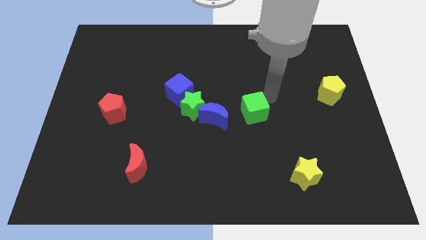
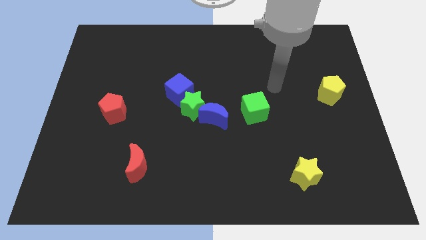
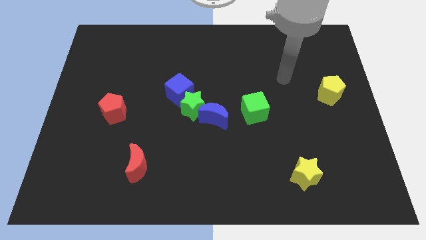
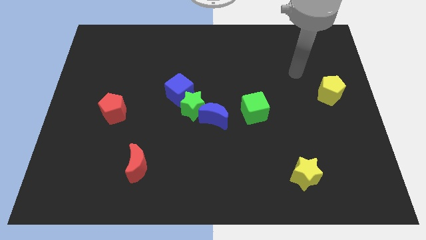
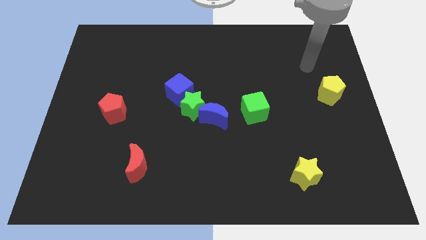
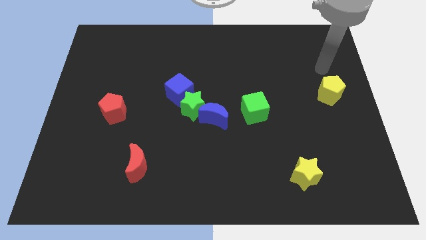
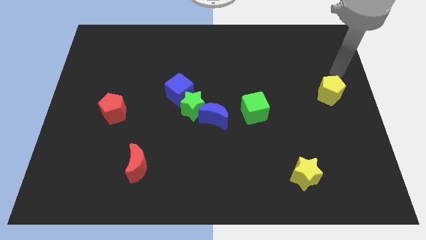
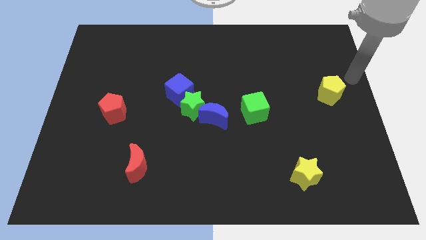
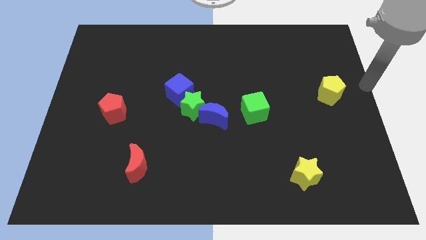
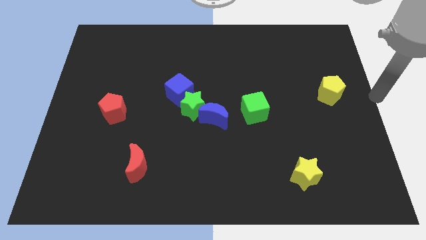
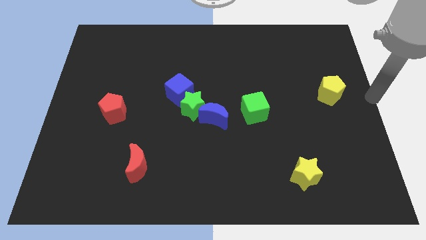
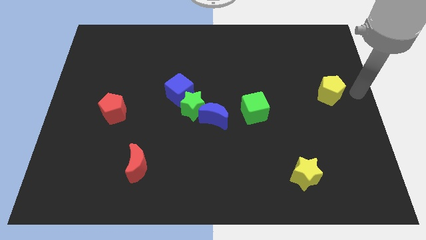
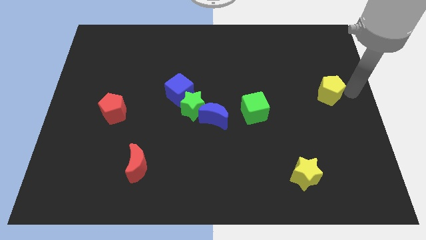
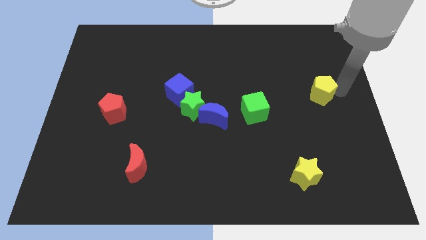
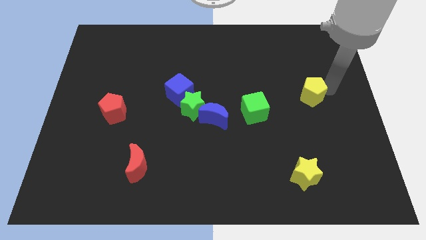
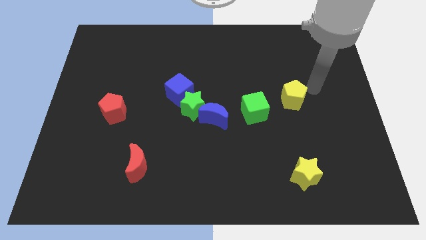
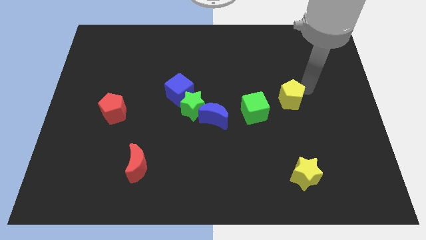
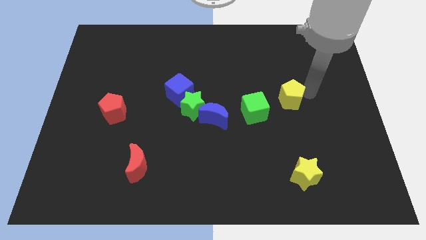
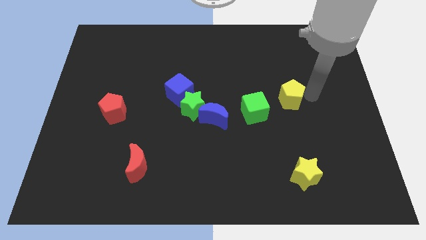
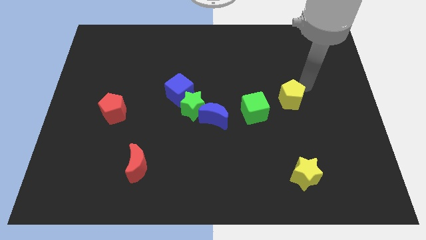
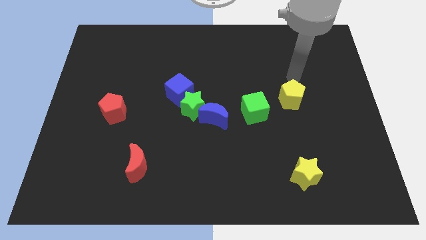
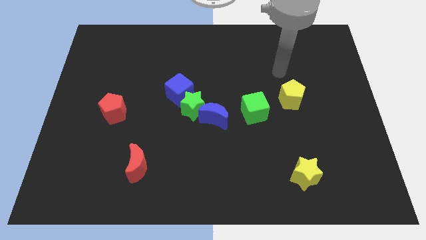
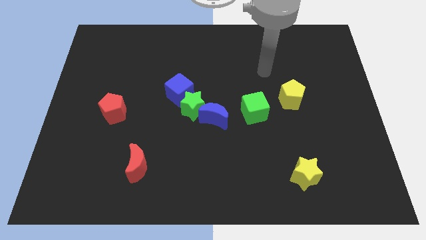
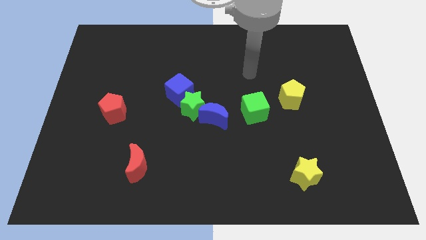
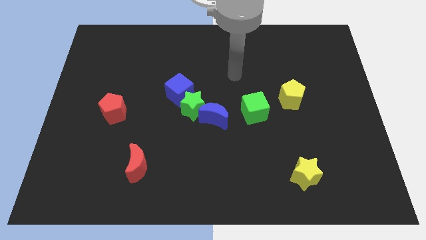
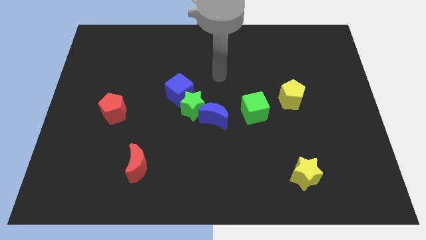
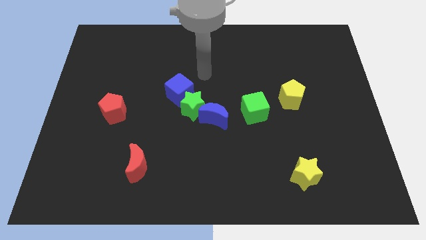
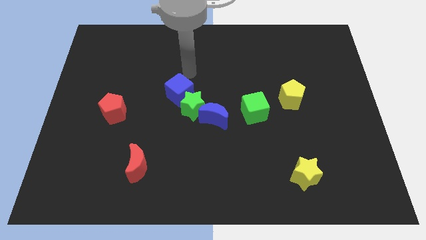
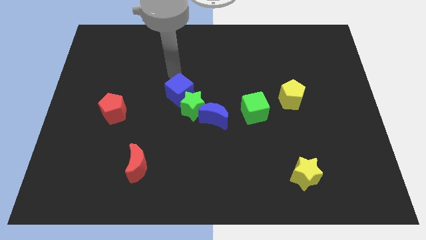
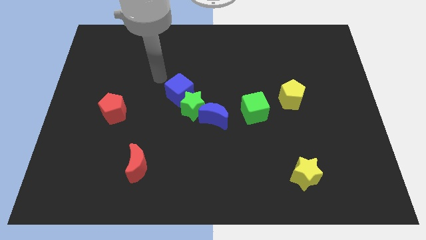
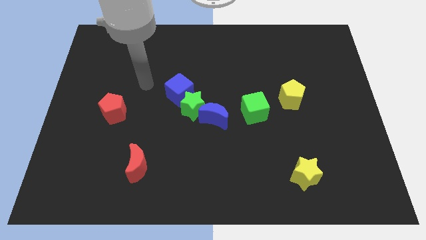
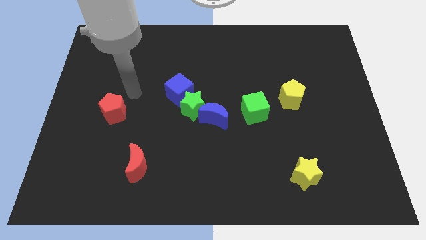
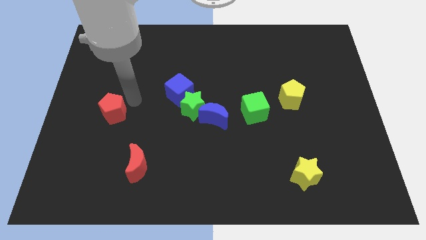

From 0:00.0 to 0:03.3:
push the yellow pentagon to the right side of the green cube

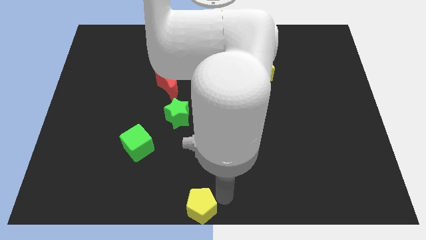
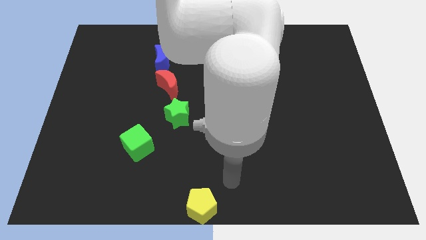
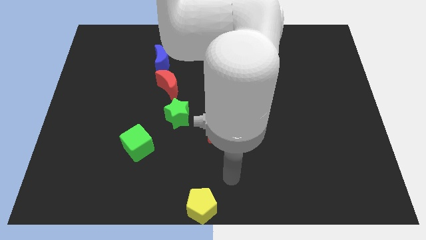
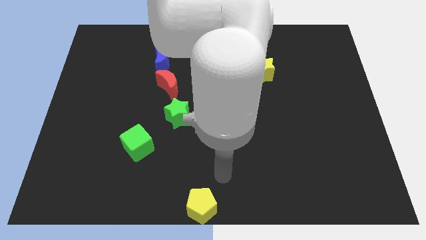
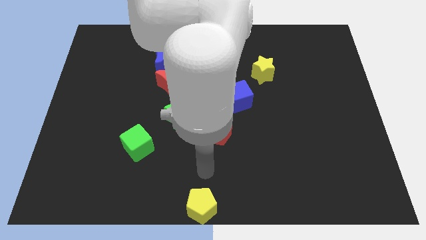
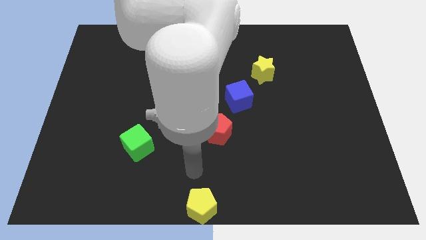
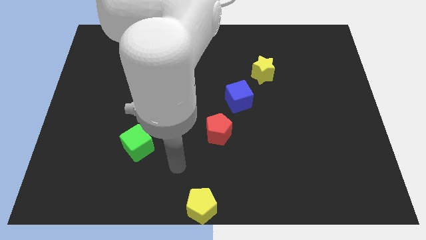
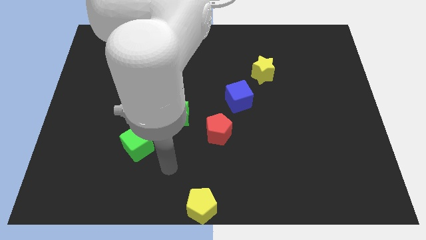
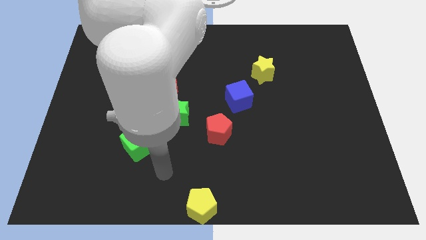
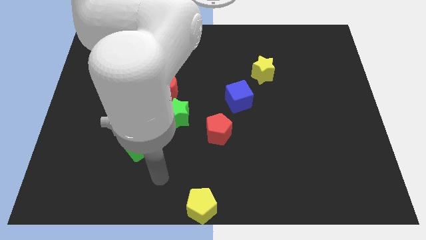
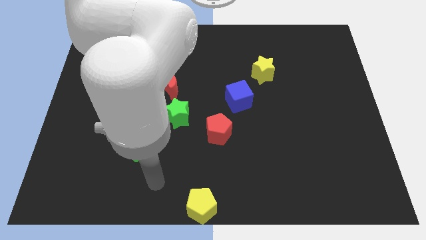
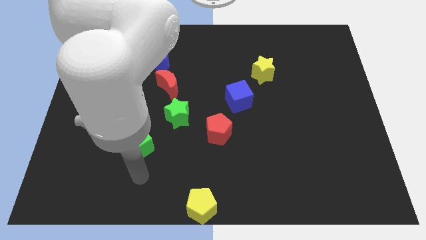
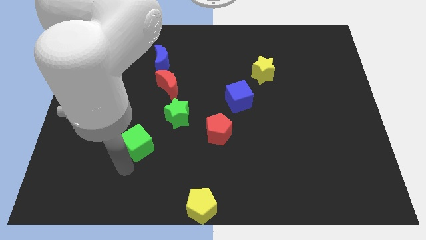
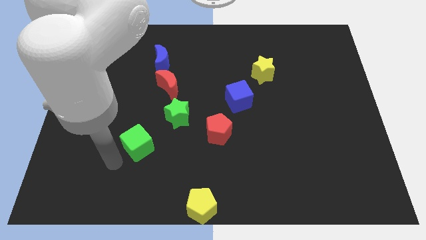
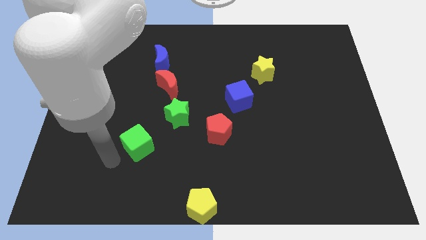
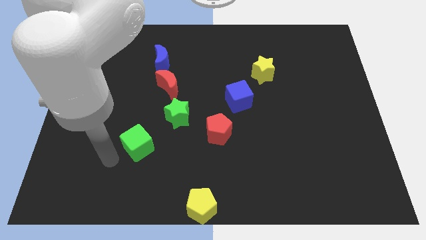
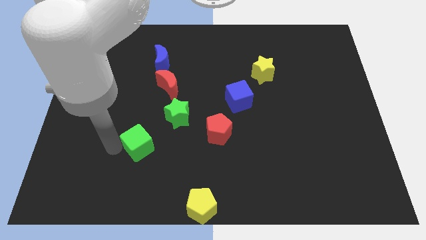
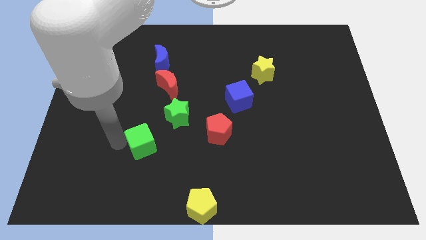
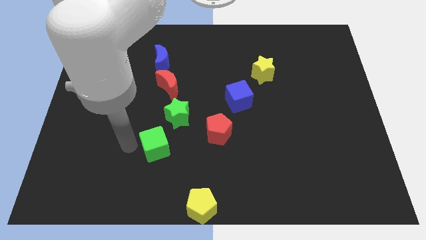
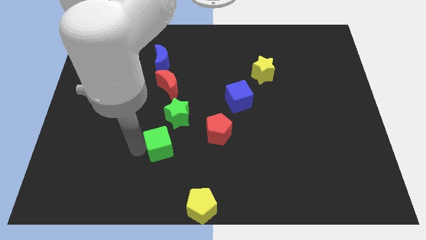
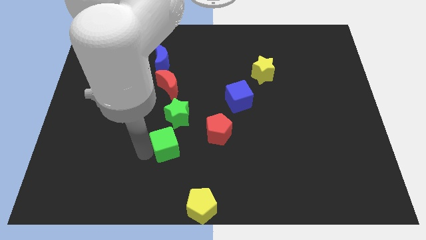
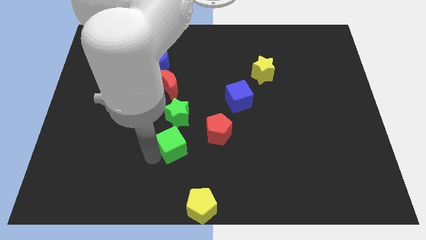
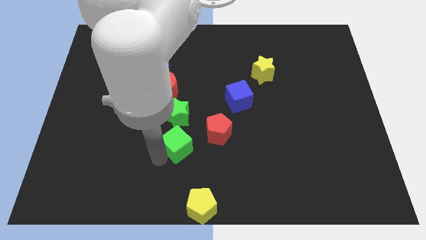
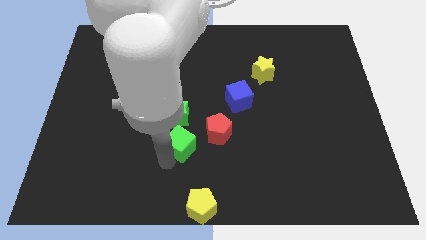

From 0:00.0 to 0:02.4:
place the green cube diagonally bottom left to the red pentagon

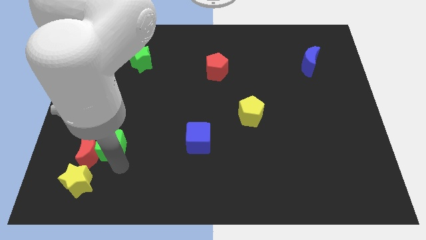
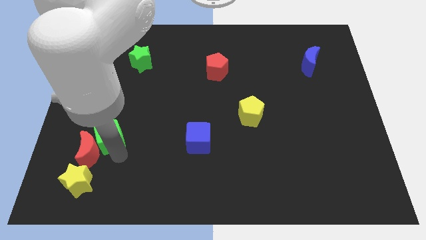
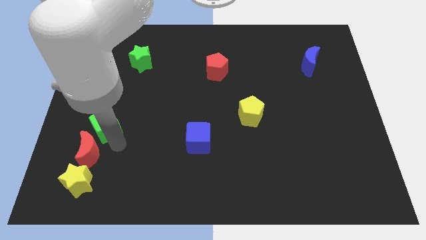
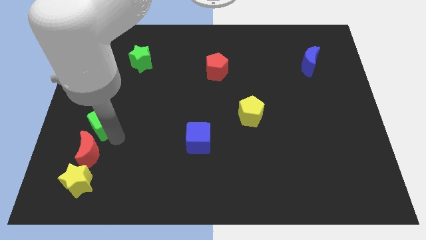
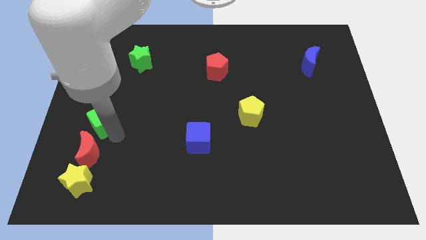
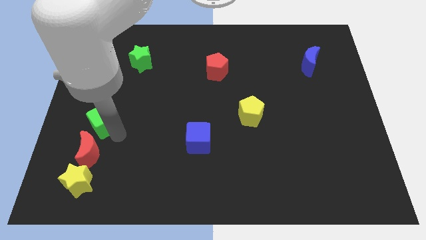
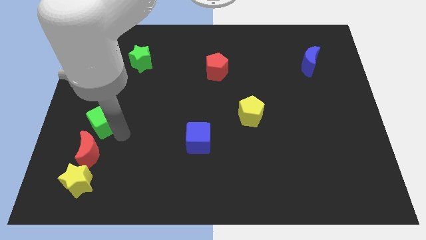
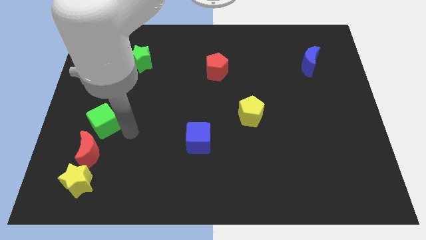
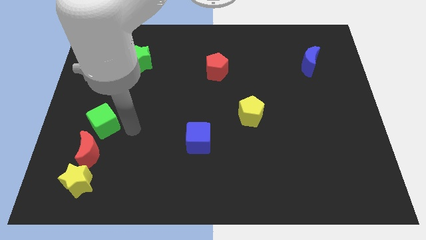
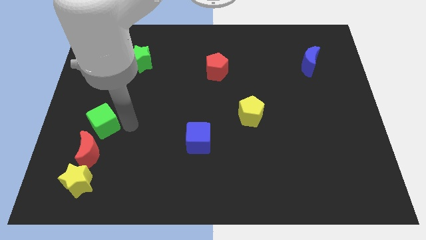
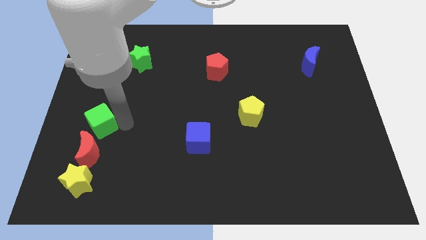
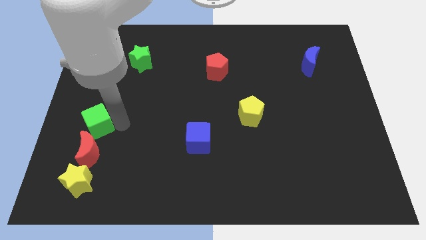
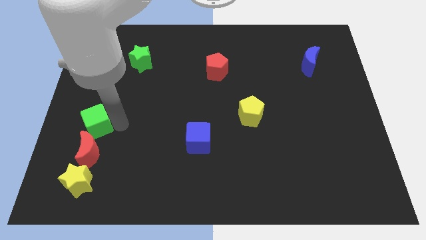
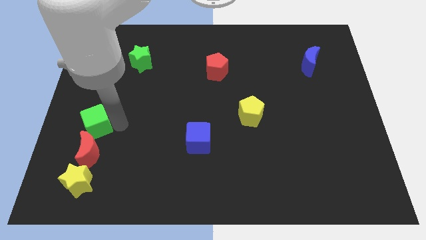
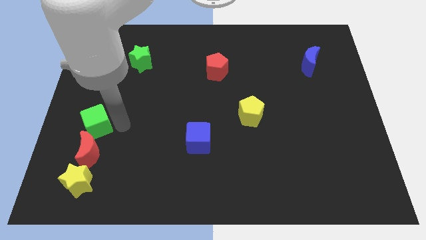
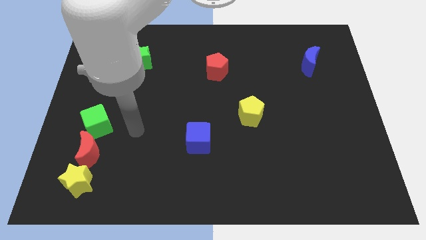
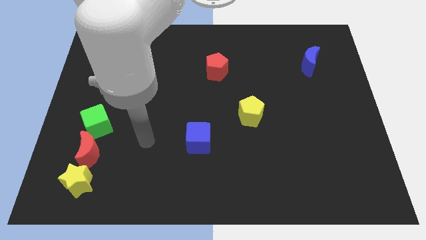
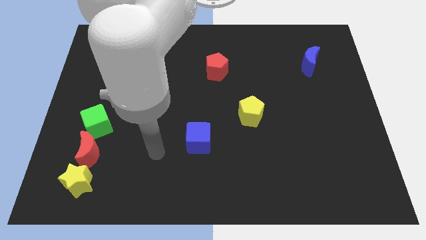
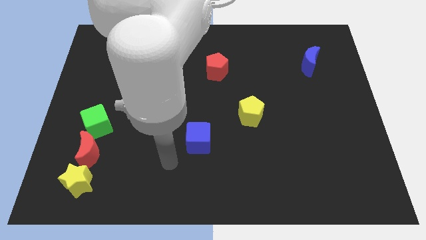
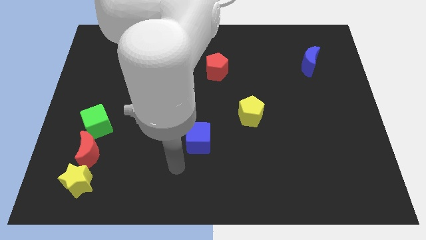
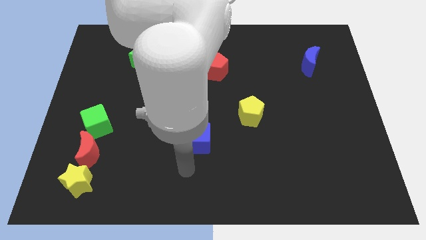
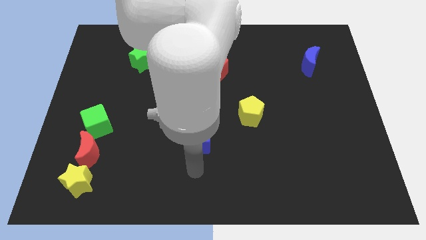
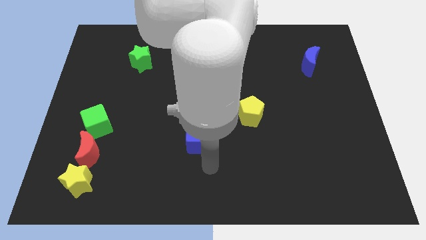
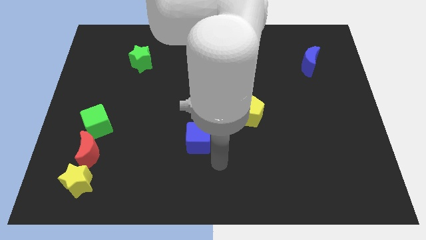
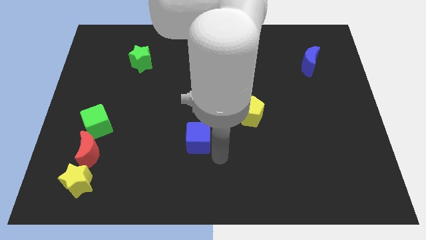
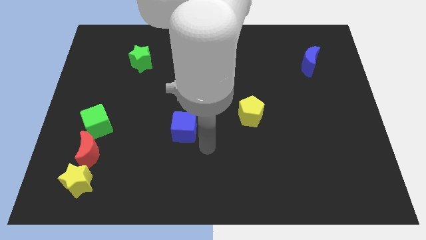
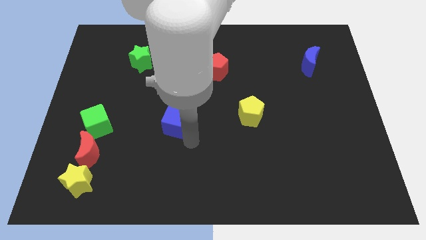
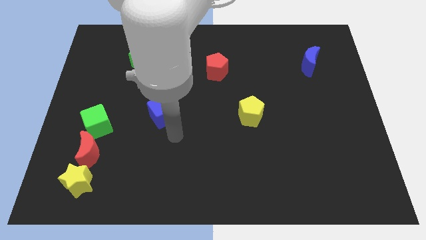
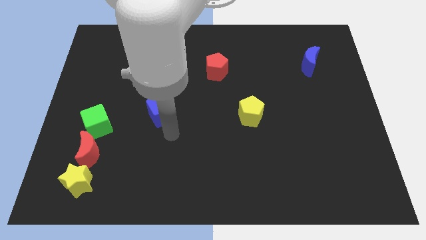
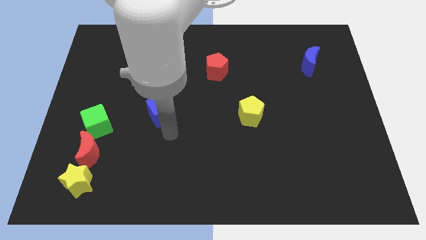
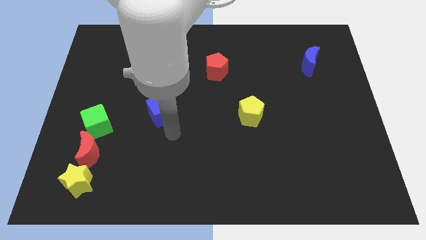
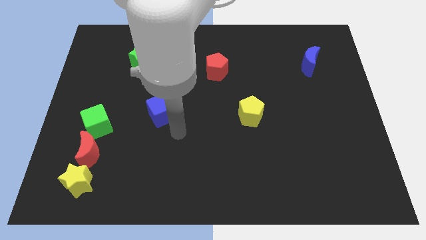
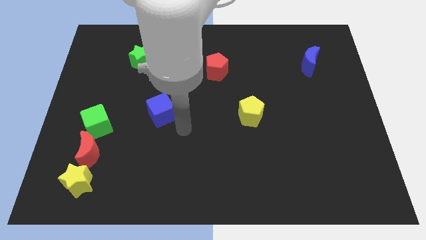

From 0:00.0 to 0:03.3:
push the green cube towards the top of red crescent to form vertical line bottom left corner of the board
